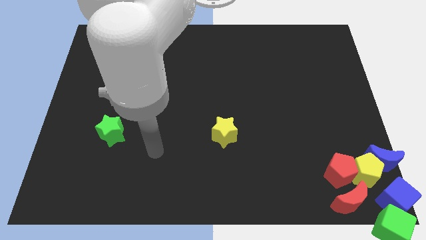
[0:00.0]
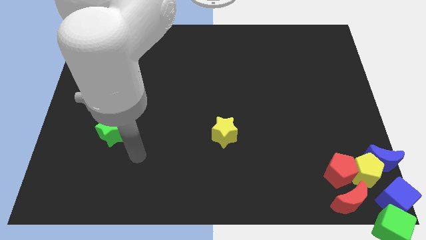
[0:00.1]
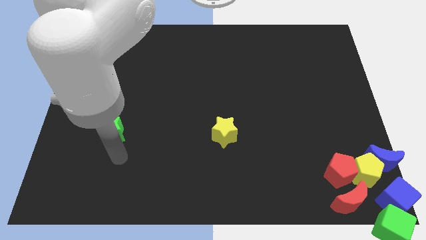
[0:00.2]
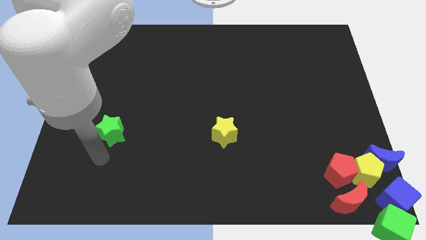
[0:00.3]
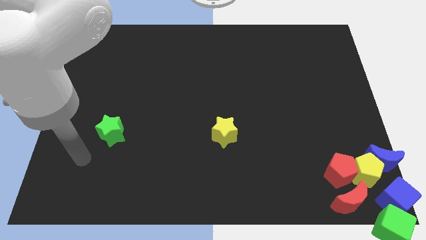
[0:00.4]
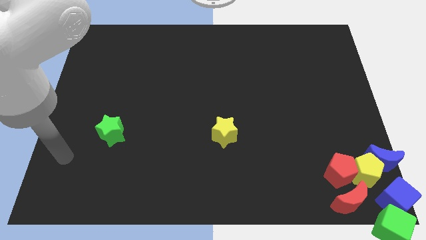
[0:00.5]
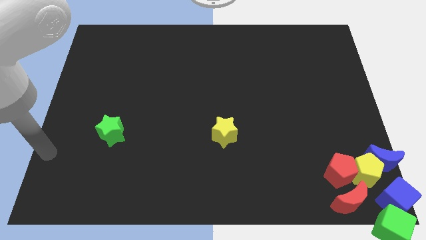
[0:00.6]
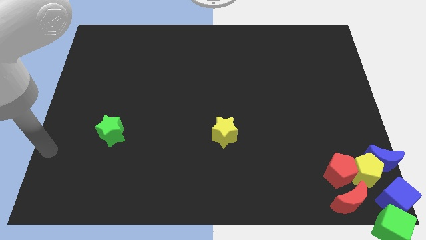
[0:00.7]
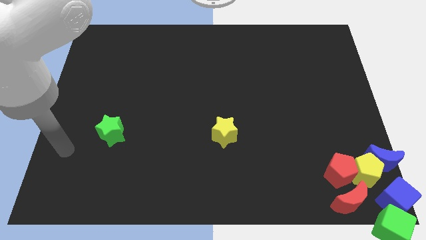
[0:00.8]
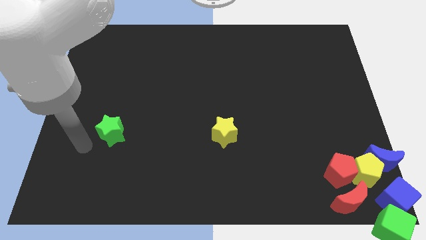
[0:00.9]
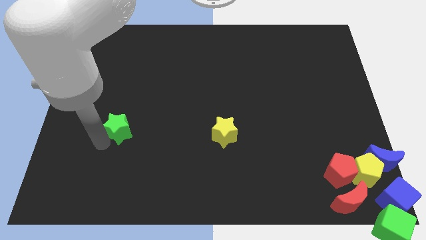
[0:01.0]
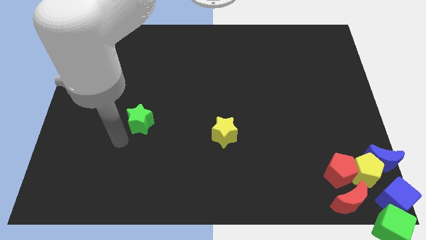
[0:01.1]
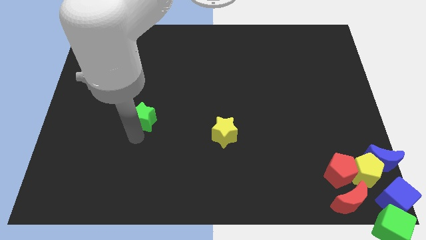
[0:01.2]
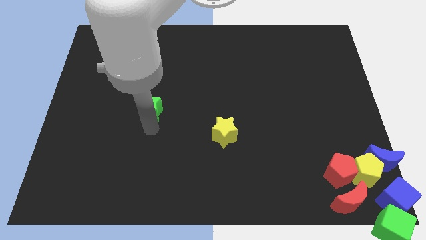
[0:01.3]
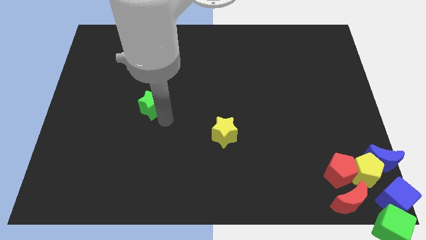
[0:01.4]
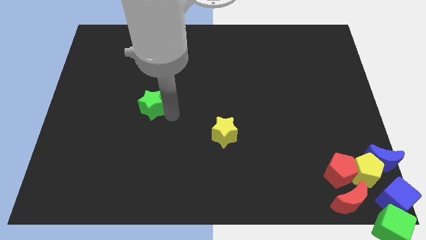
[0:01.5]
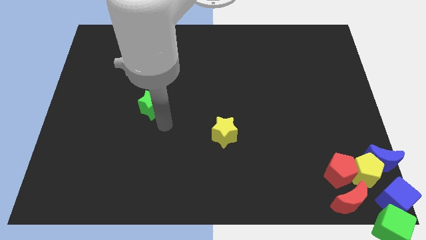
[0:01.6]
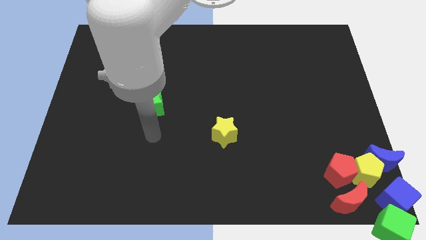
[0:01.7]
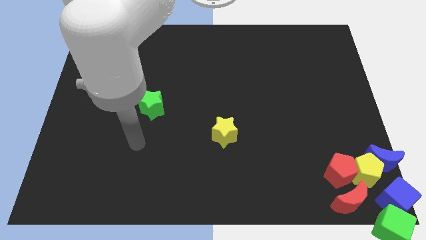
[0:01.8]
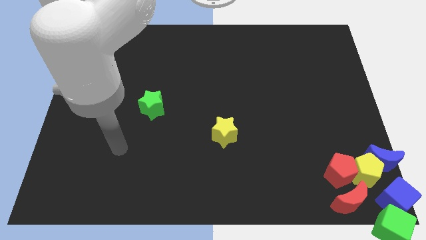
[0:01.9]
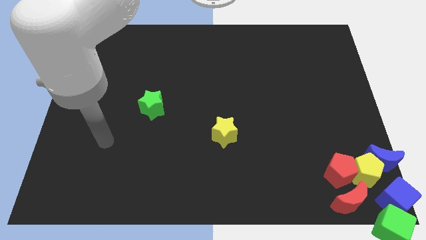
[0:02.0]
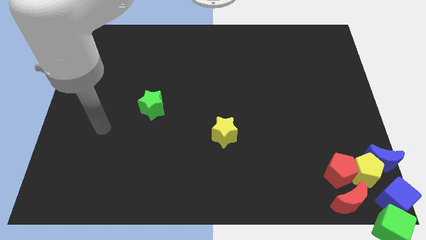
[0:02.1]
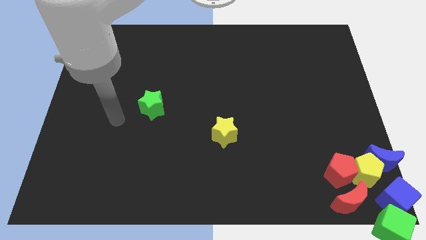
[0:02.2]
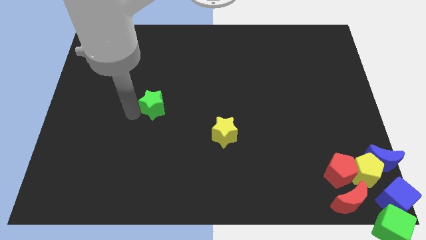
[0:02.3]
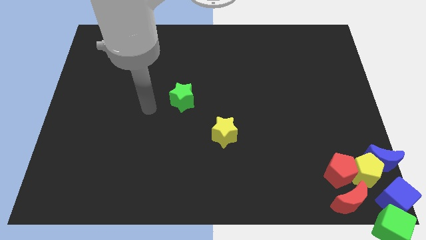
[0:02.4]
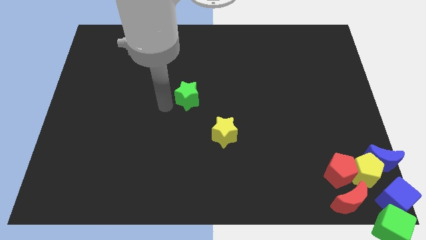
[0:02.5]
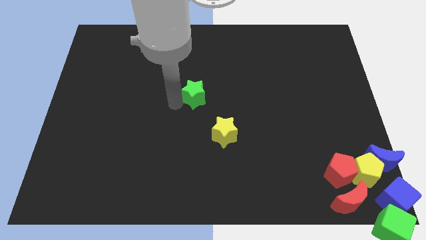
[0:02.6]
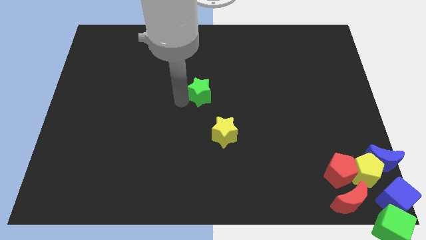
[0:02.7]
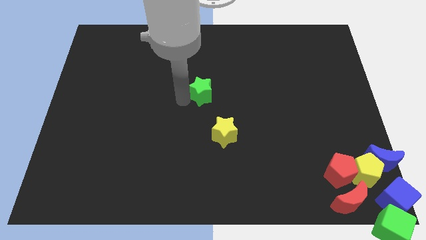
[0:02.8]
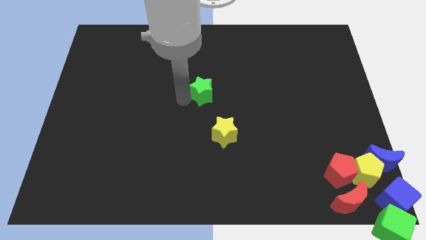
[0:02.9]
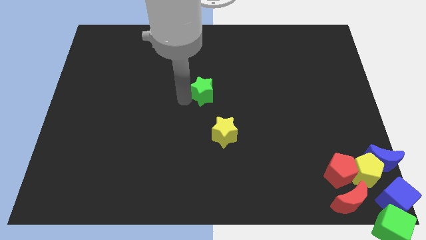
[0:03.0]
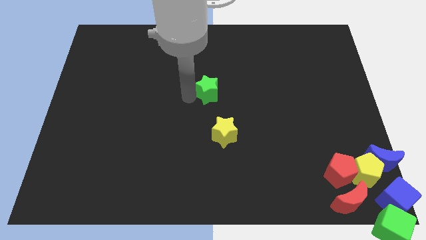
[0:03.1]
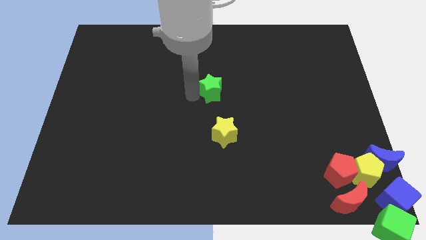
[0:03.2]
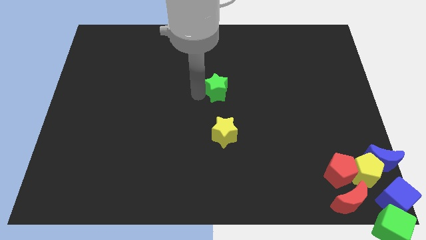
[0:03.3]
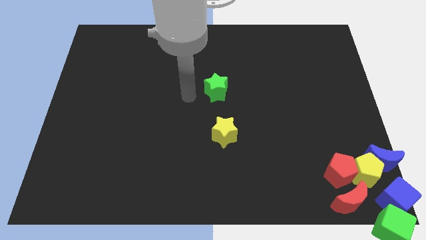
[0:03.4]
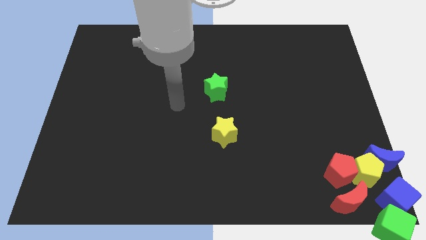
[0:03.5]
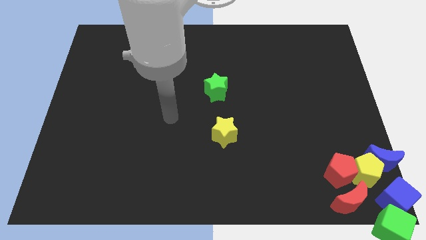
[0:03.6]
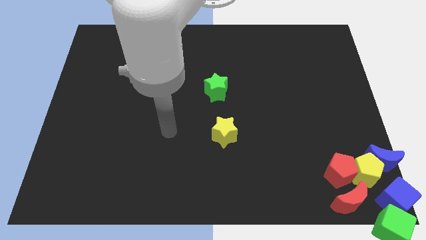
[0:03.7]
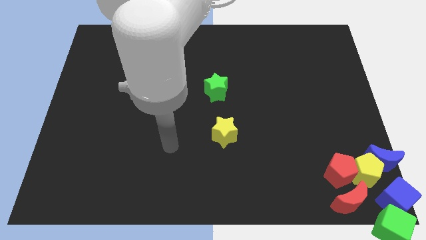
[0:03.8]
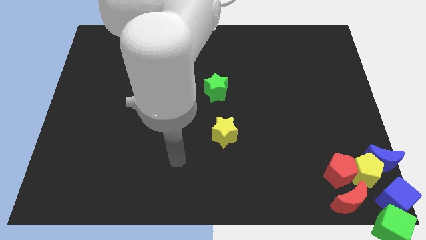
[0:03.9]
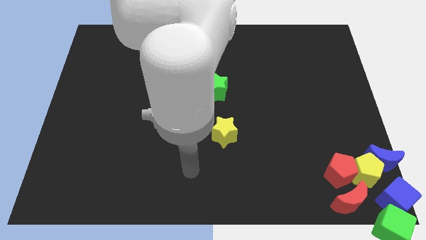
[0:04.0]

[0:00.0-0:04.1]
push the green star to the top side of the yellow star

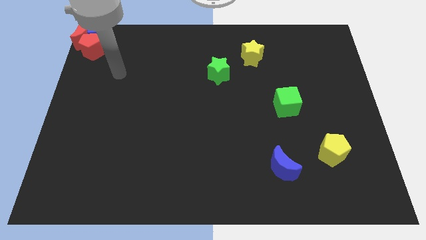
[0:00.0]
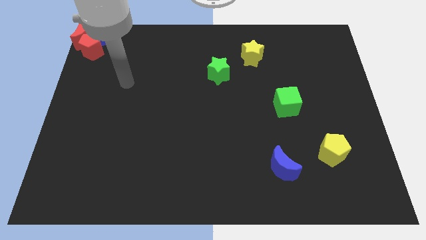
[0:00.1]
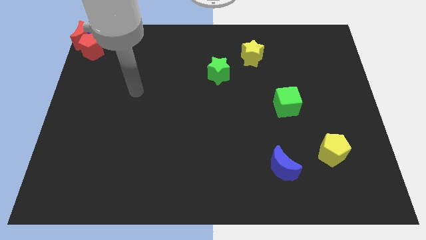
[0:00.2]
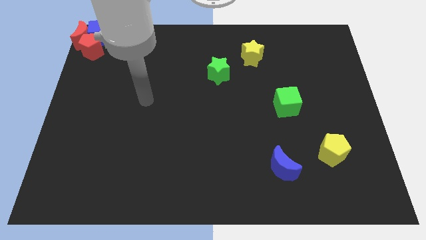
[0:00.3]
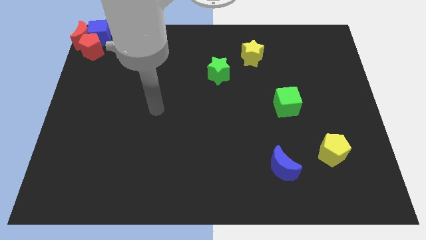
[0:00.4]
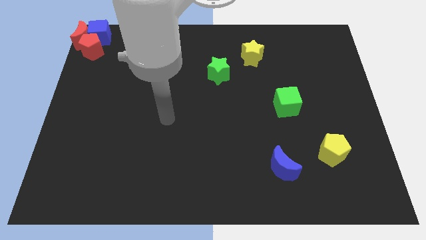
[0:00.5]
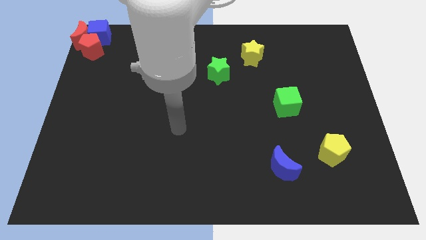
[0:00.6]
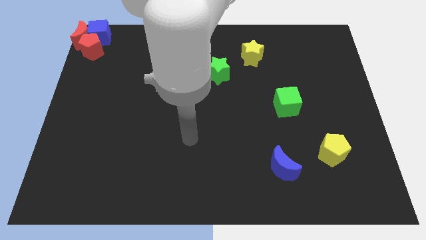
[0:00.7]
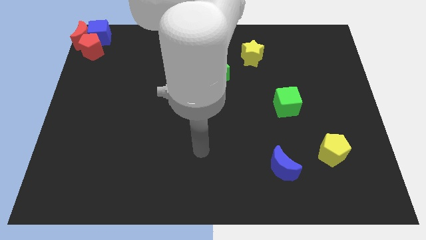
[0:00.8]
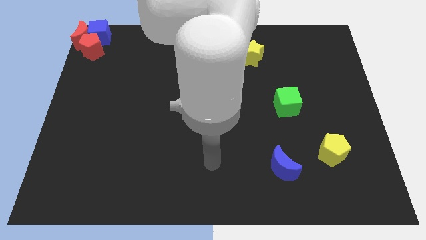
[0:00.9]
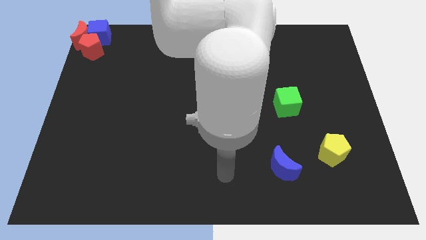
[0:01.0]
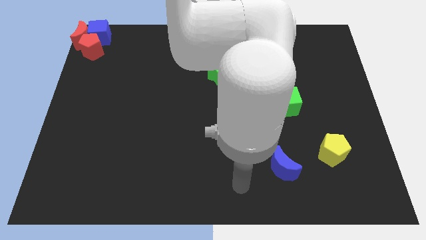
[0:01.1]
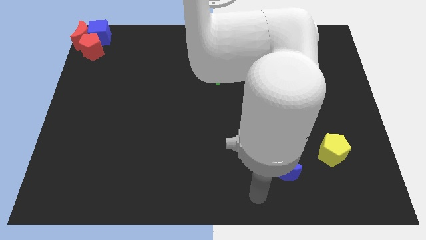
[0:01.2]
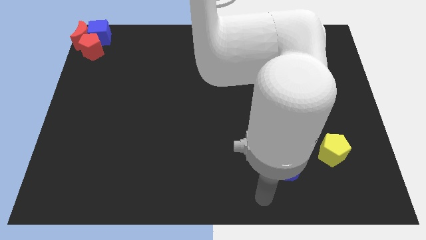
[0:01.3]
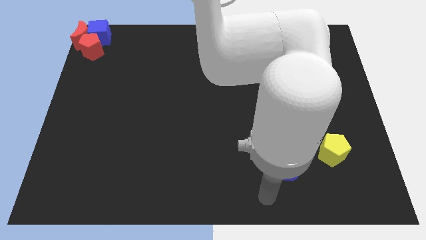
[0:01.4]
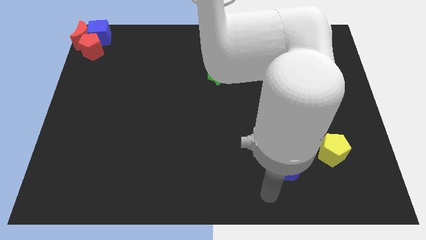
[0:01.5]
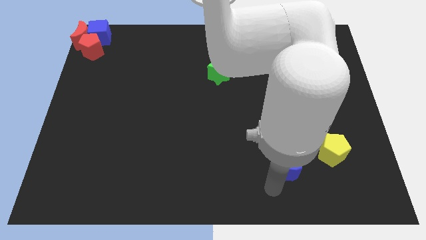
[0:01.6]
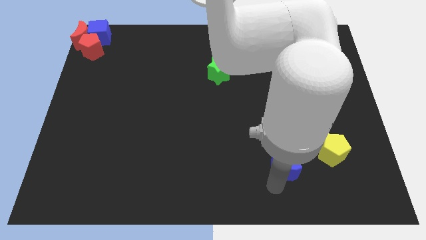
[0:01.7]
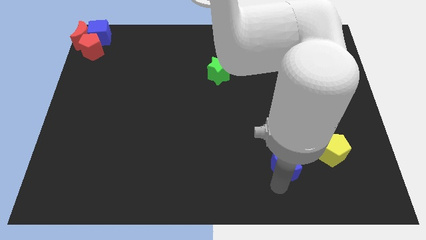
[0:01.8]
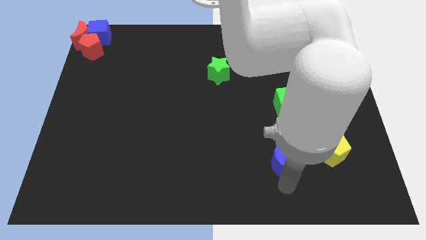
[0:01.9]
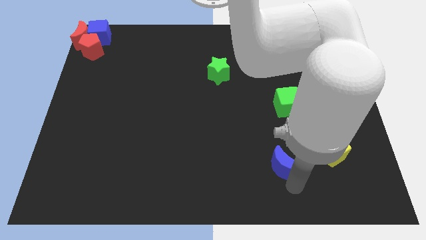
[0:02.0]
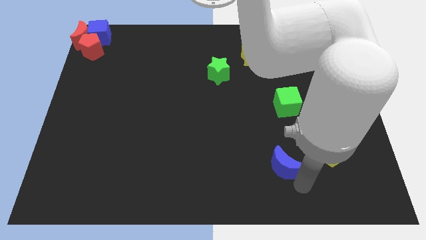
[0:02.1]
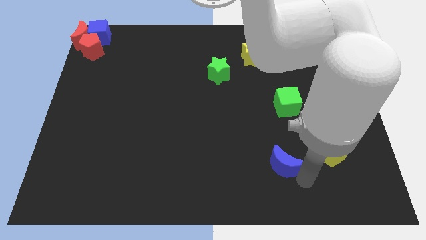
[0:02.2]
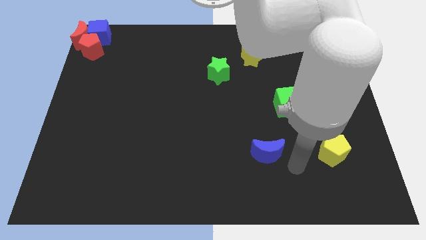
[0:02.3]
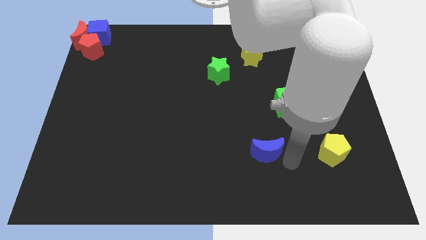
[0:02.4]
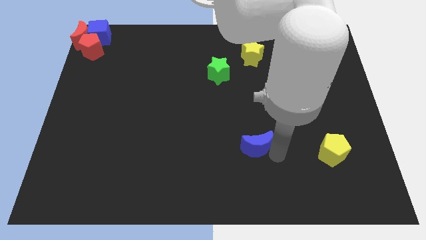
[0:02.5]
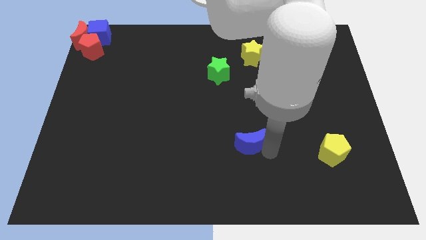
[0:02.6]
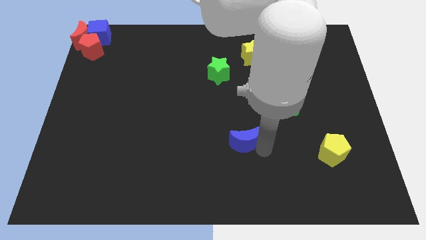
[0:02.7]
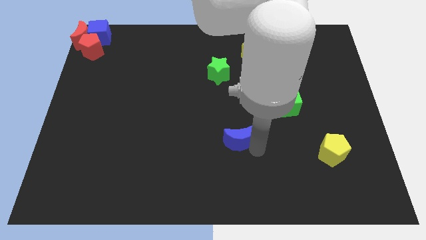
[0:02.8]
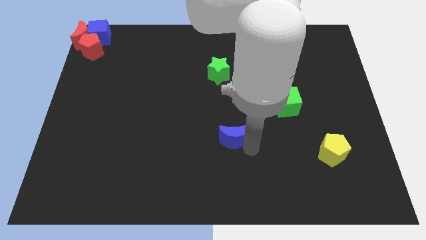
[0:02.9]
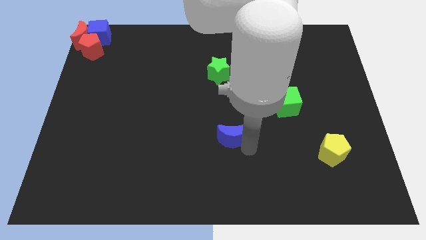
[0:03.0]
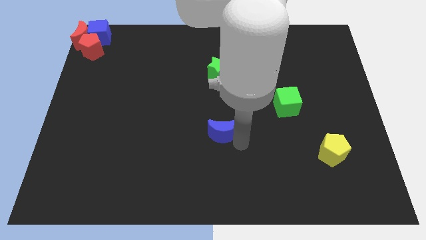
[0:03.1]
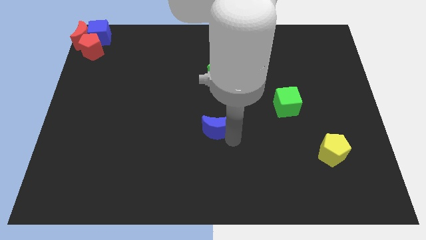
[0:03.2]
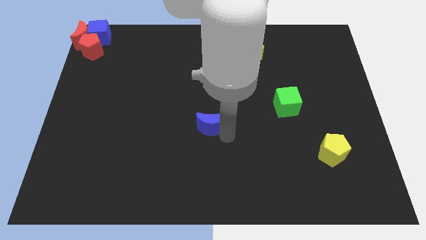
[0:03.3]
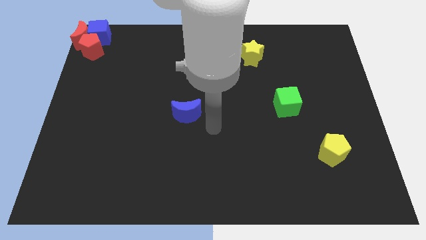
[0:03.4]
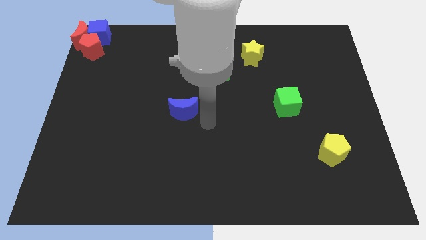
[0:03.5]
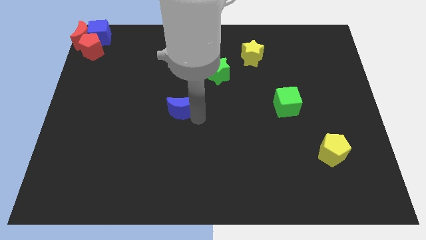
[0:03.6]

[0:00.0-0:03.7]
place the blue crescent at the center of the board

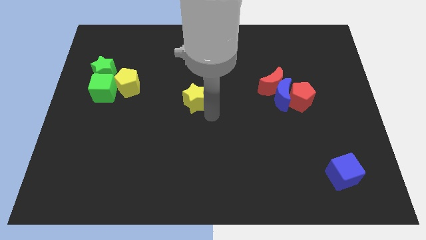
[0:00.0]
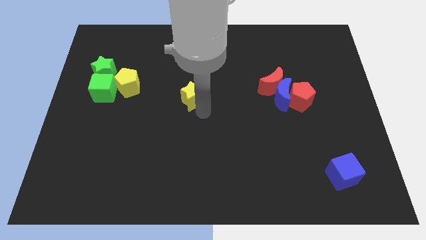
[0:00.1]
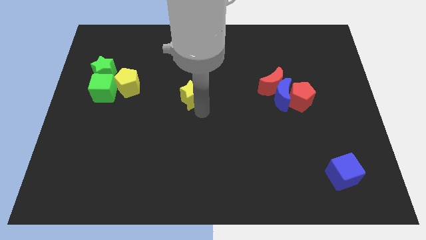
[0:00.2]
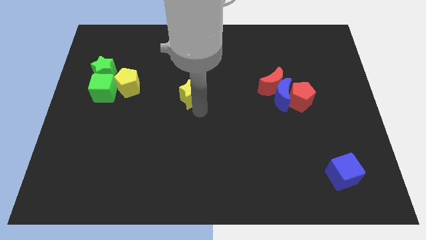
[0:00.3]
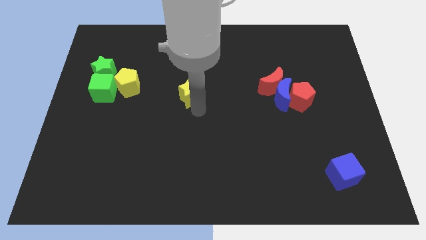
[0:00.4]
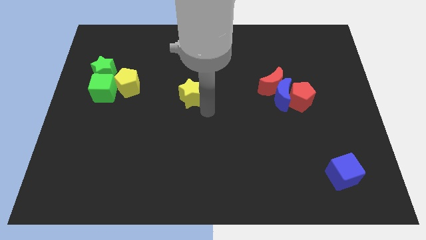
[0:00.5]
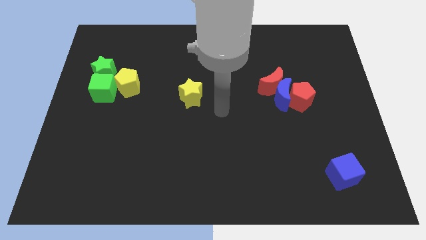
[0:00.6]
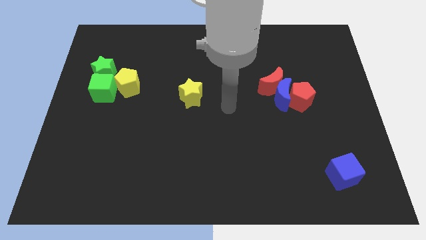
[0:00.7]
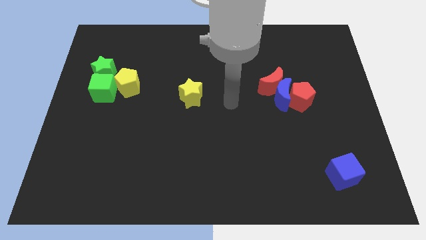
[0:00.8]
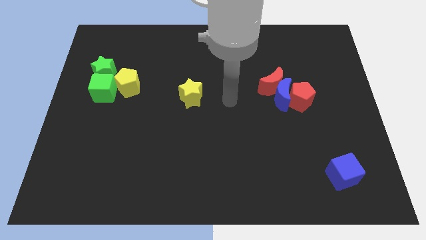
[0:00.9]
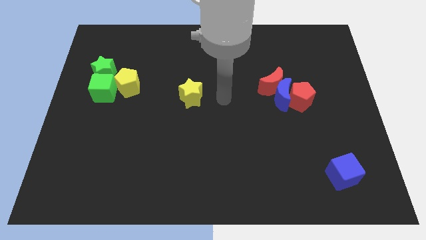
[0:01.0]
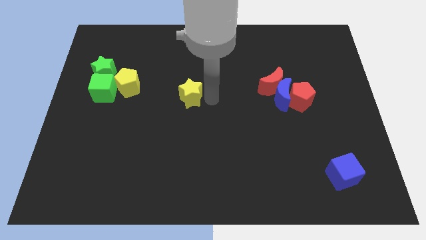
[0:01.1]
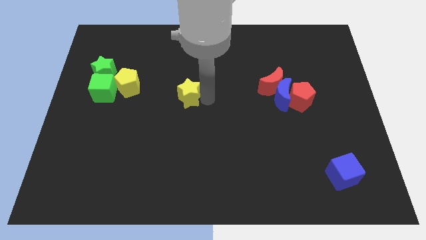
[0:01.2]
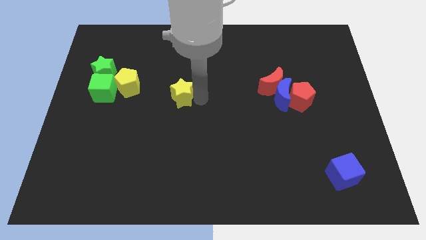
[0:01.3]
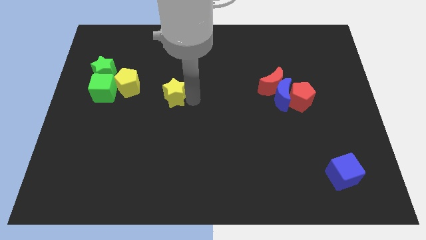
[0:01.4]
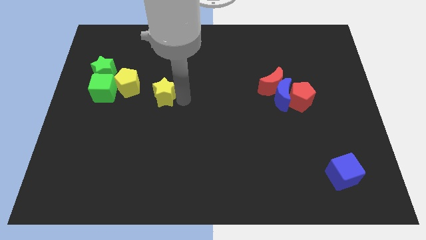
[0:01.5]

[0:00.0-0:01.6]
push the yellow star towards the yellow pentagon
